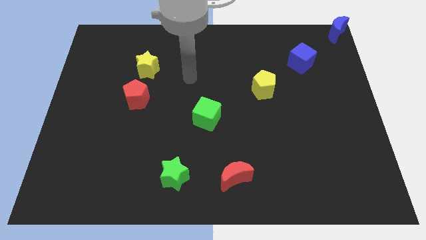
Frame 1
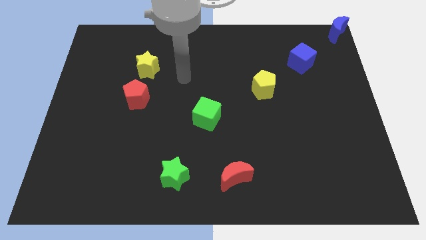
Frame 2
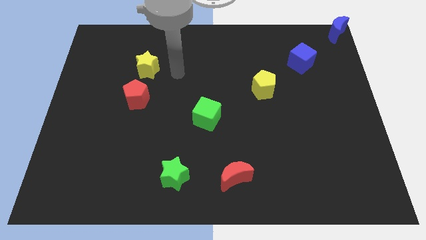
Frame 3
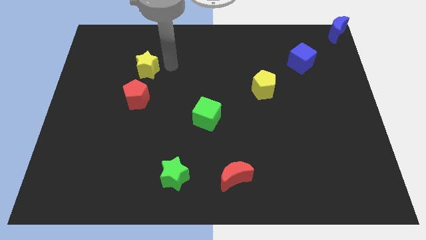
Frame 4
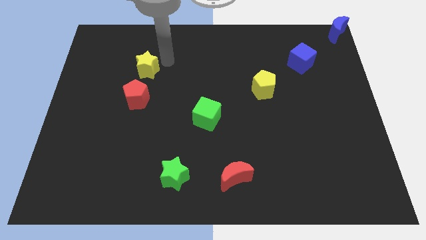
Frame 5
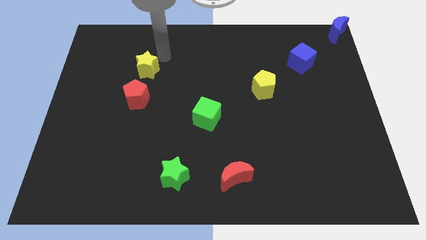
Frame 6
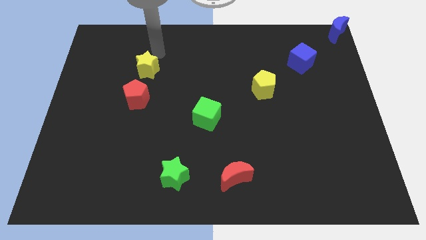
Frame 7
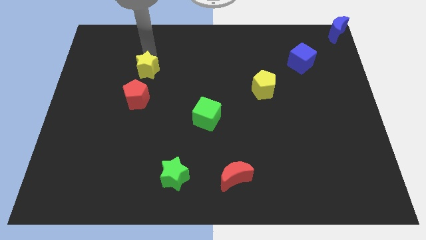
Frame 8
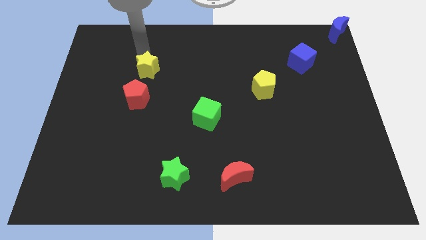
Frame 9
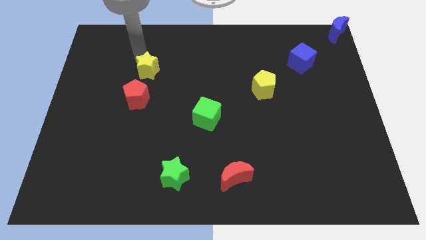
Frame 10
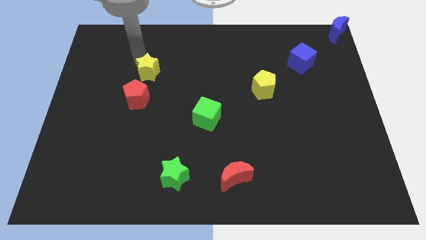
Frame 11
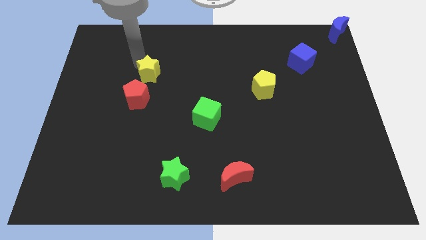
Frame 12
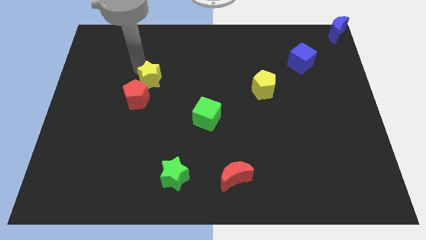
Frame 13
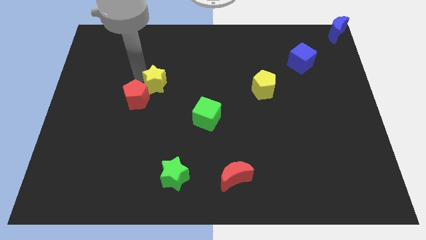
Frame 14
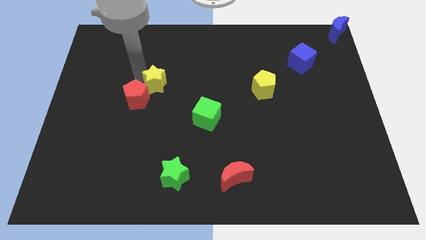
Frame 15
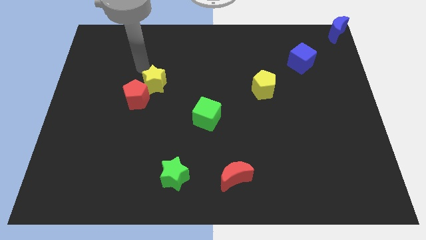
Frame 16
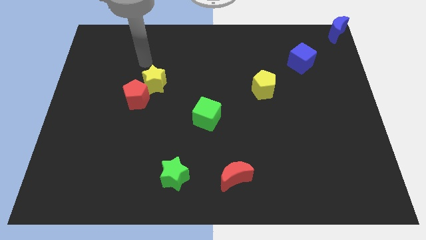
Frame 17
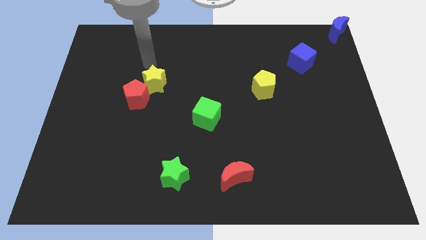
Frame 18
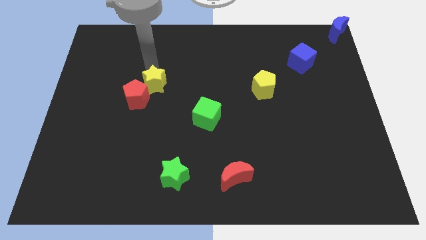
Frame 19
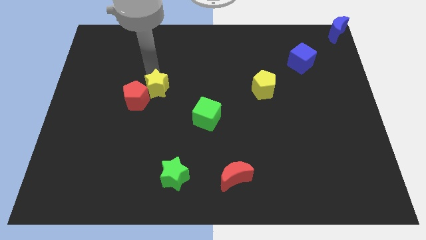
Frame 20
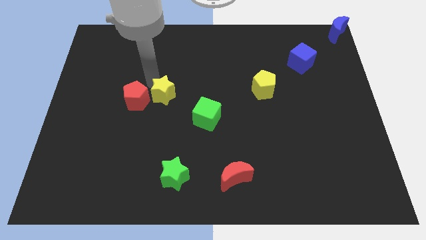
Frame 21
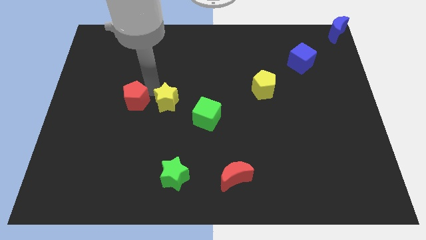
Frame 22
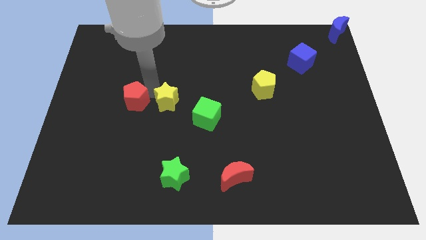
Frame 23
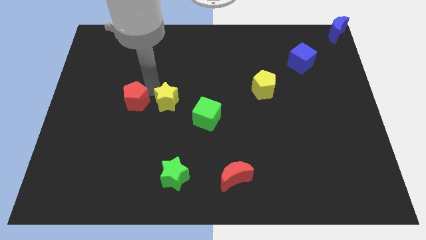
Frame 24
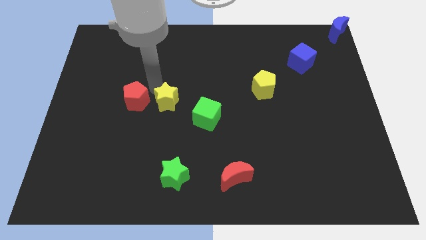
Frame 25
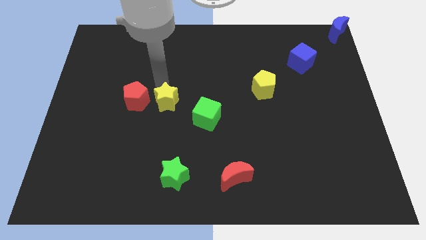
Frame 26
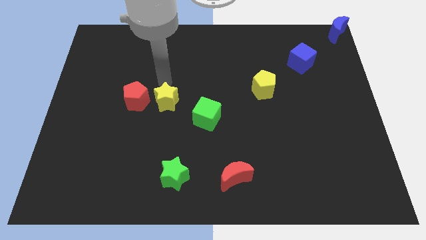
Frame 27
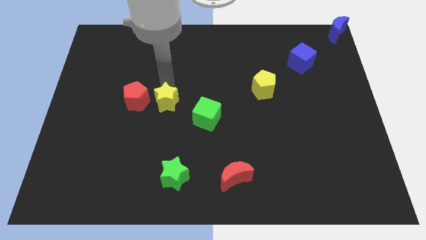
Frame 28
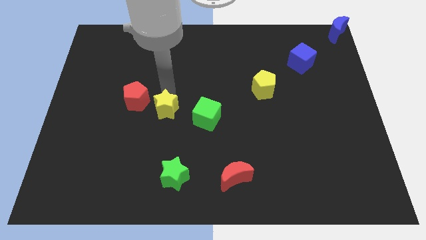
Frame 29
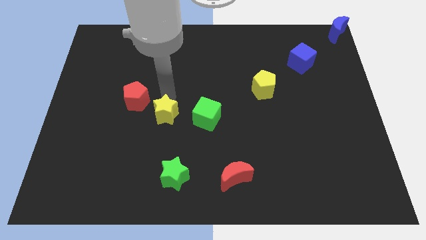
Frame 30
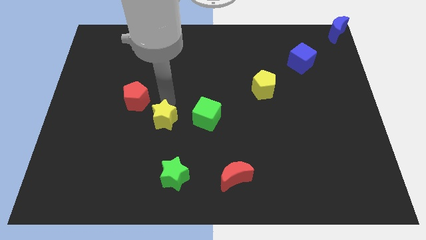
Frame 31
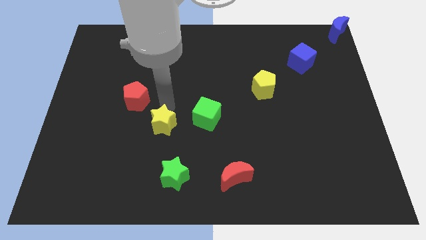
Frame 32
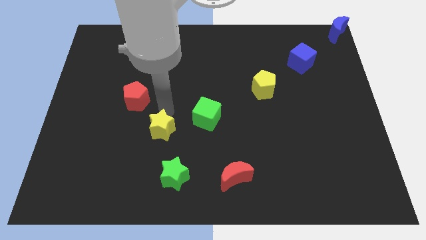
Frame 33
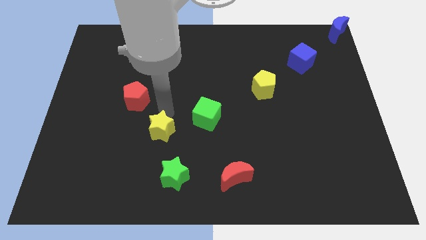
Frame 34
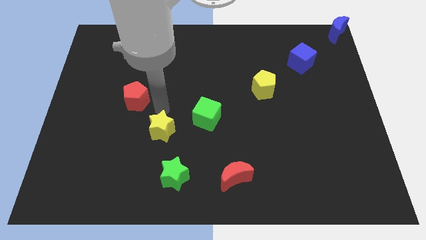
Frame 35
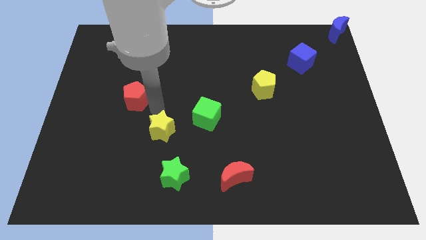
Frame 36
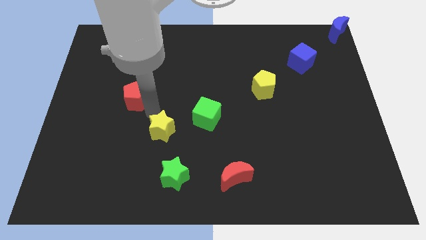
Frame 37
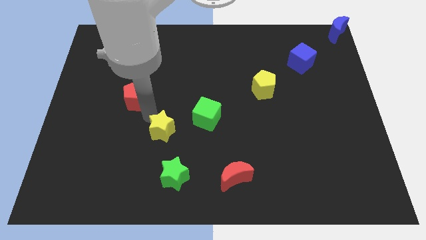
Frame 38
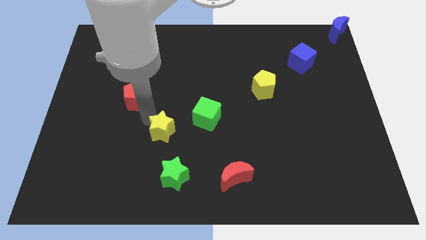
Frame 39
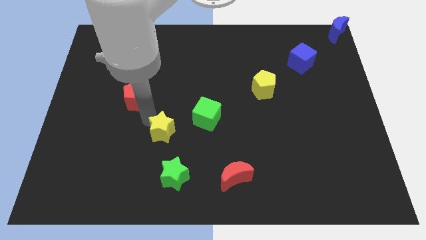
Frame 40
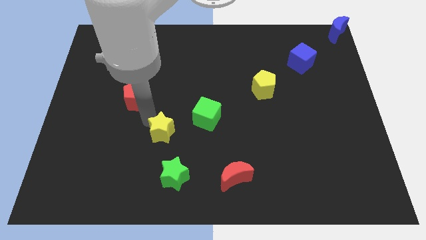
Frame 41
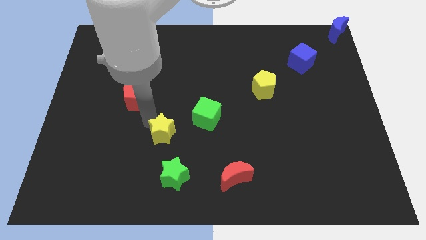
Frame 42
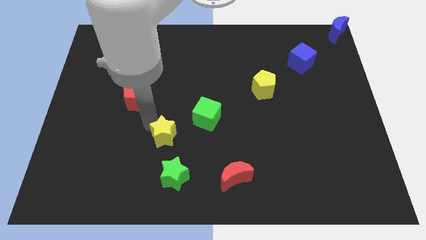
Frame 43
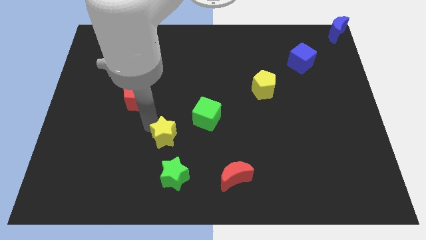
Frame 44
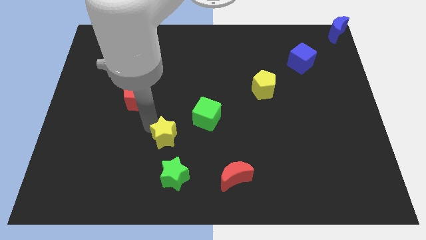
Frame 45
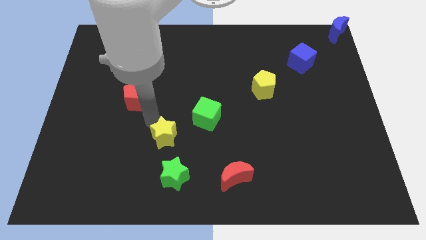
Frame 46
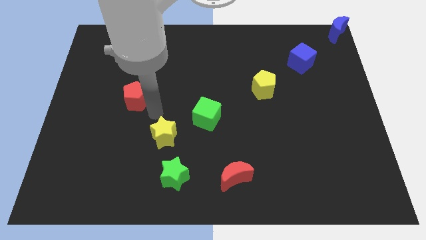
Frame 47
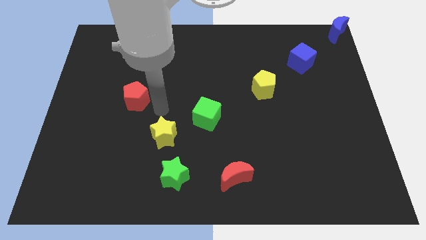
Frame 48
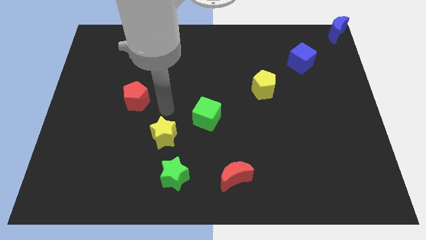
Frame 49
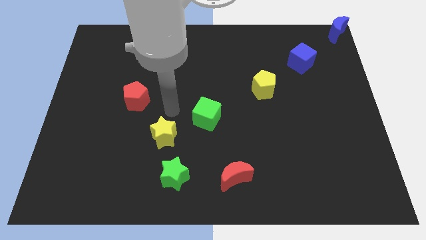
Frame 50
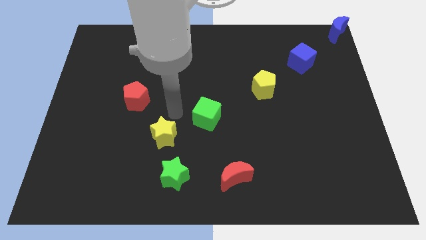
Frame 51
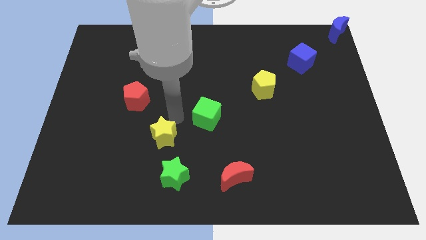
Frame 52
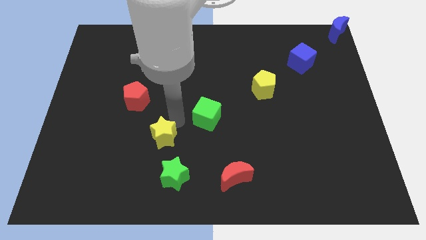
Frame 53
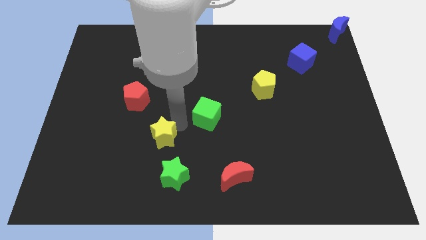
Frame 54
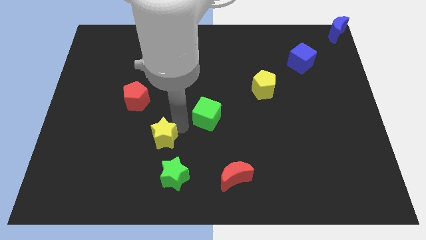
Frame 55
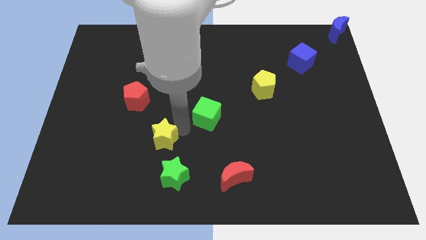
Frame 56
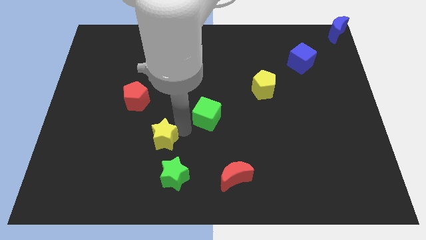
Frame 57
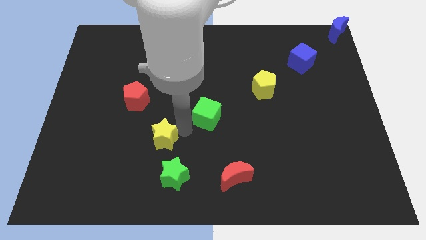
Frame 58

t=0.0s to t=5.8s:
drag the yellow star to the top left of the green star

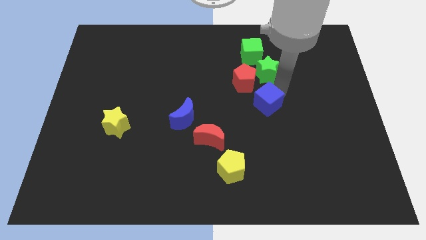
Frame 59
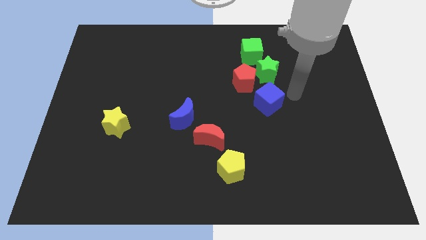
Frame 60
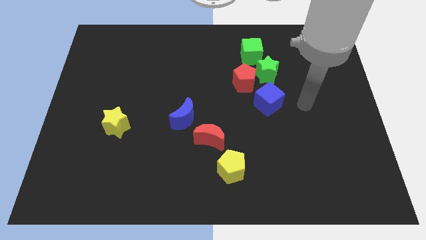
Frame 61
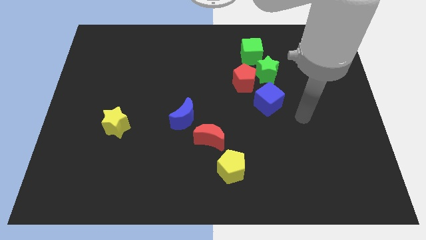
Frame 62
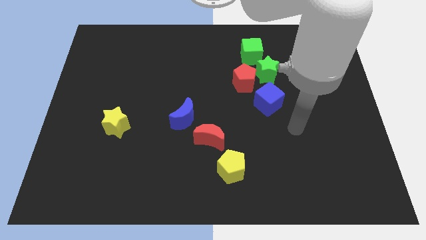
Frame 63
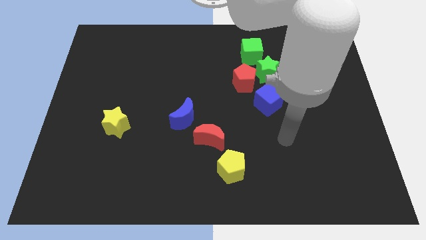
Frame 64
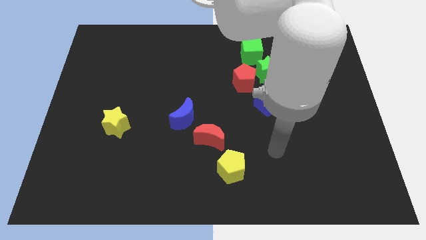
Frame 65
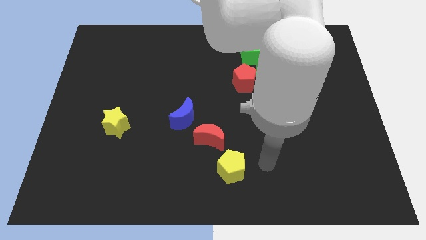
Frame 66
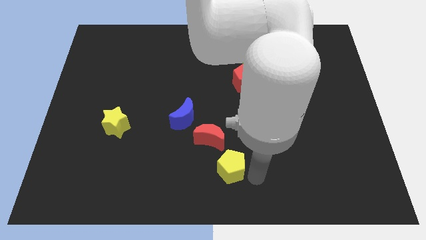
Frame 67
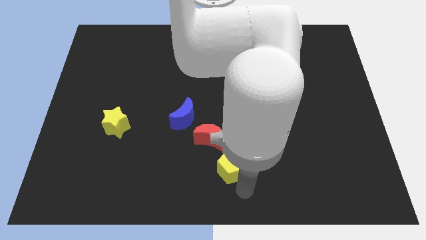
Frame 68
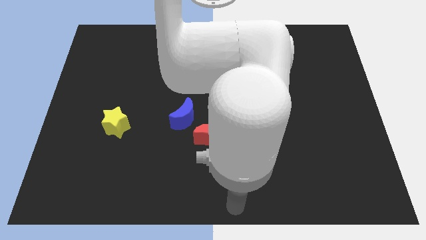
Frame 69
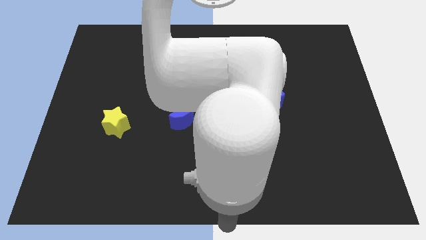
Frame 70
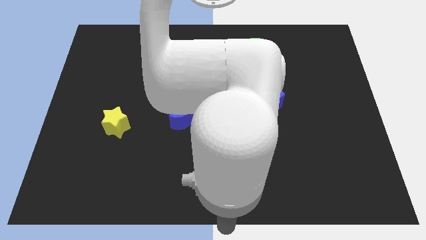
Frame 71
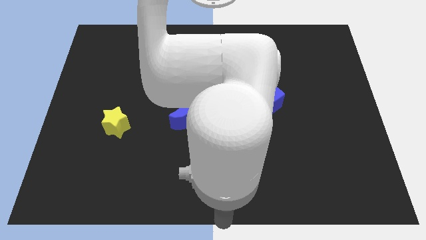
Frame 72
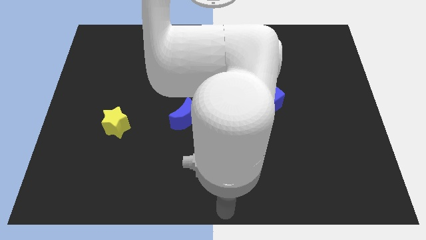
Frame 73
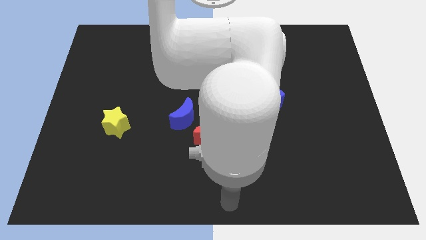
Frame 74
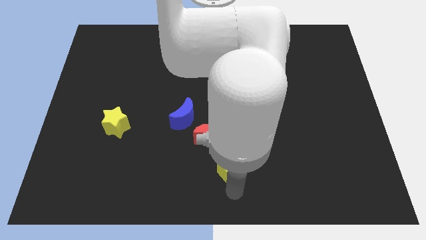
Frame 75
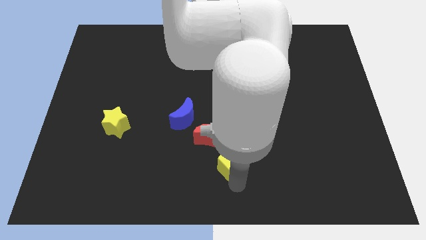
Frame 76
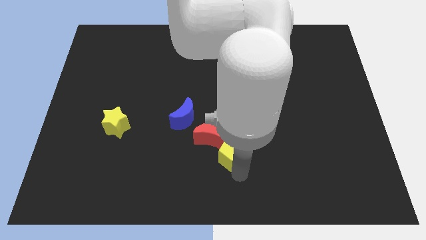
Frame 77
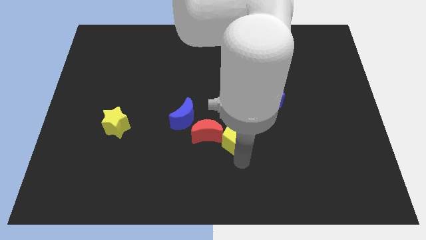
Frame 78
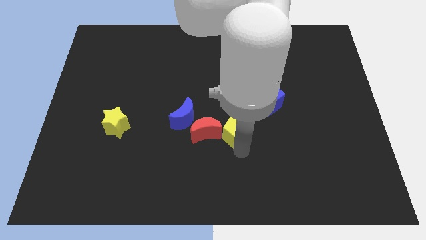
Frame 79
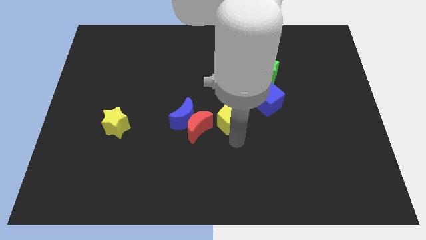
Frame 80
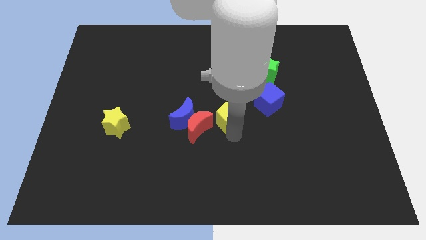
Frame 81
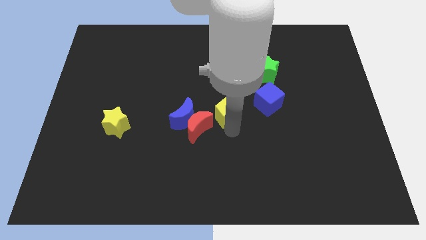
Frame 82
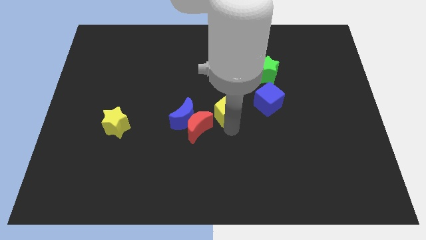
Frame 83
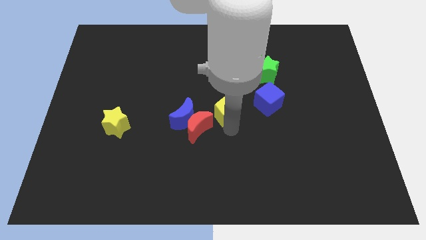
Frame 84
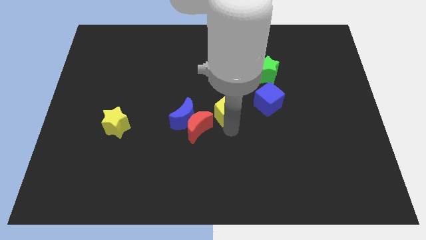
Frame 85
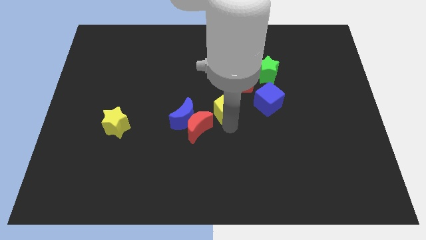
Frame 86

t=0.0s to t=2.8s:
push the yellow pentagon slightly upwards

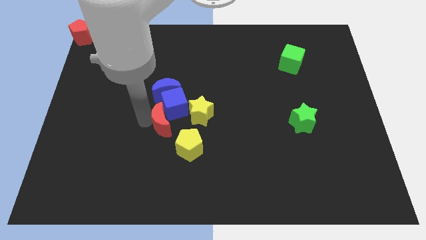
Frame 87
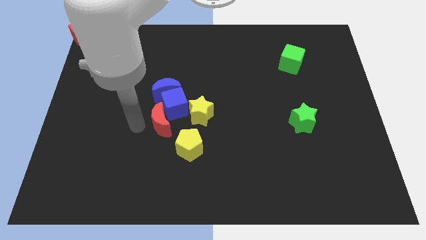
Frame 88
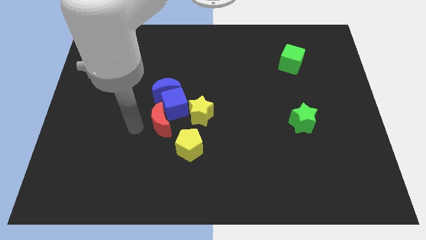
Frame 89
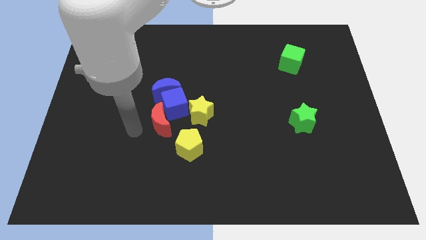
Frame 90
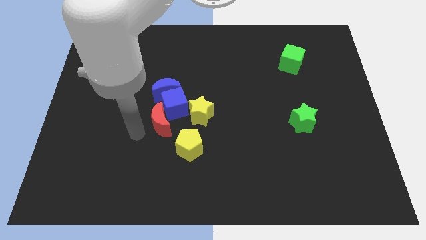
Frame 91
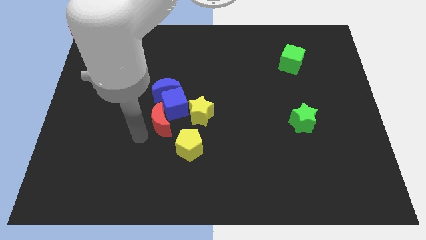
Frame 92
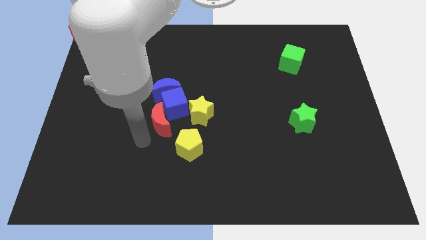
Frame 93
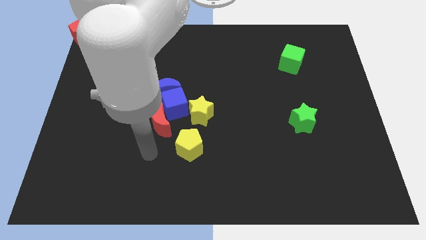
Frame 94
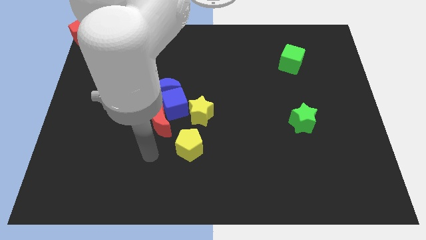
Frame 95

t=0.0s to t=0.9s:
move away the arm from the red moon
